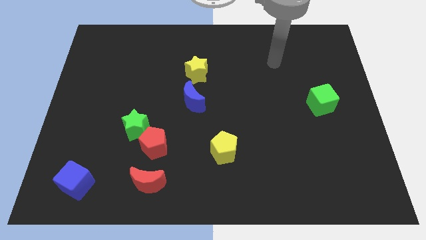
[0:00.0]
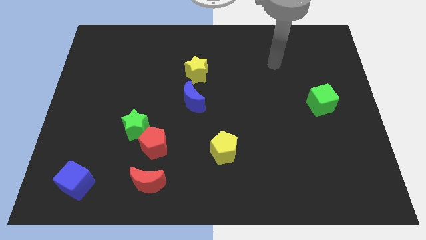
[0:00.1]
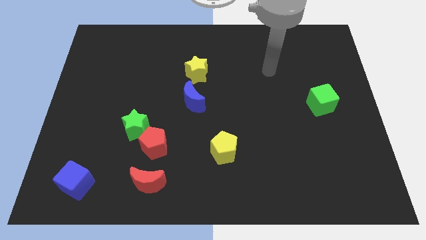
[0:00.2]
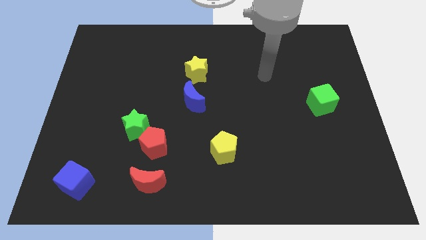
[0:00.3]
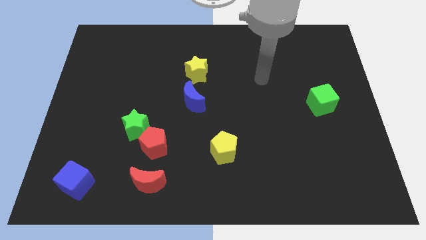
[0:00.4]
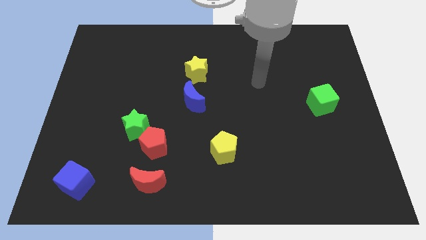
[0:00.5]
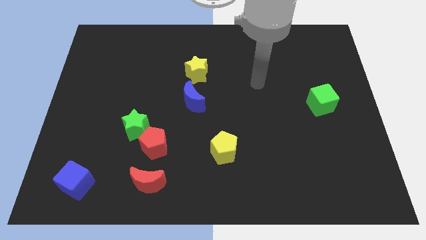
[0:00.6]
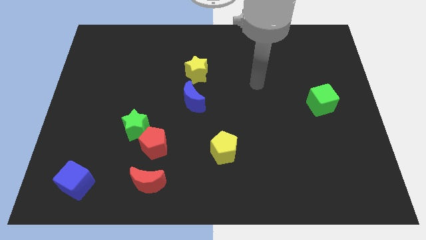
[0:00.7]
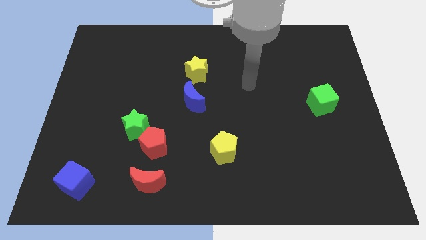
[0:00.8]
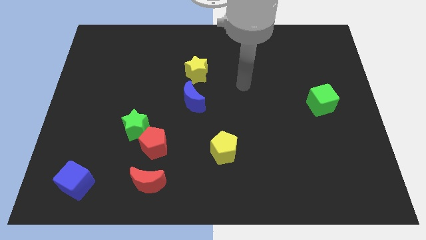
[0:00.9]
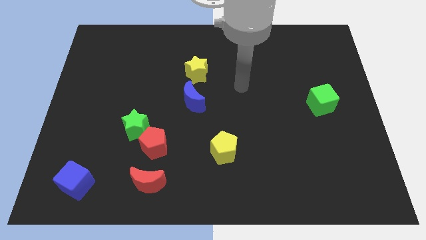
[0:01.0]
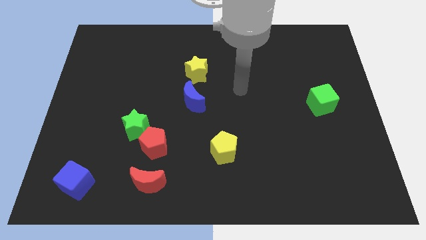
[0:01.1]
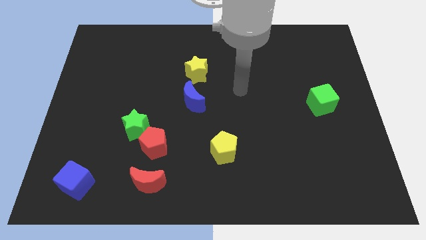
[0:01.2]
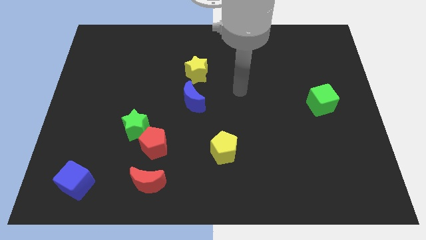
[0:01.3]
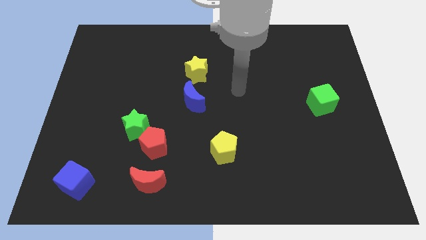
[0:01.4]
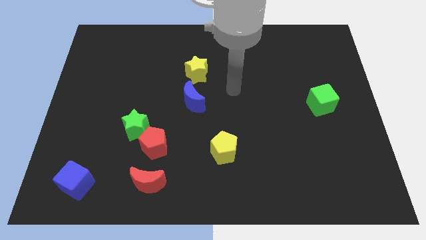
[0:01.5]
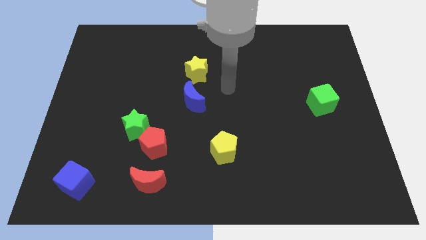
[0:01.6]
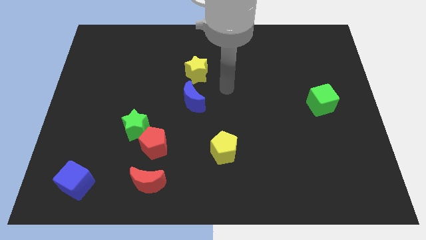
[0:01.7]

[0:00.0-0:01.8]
move your arm towards the center of the board

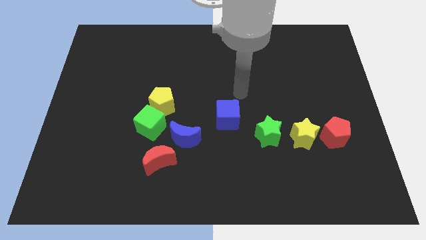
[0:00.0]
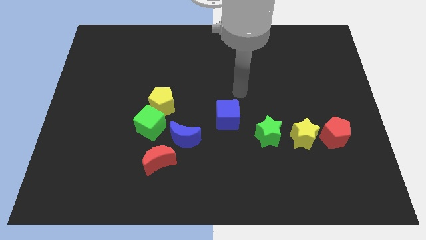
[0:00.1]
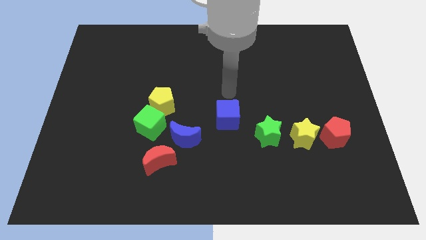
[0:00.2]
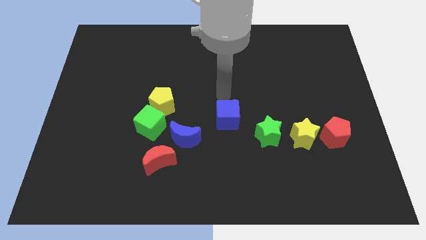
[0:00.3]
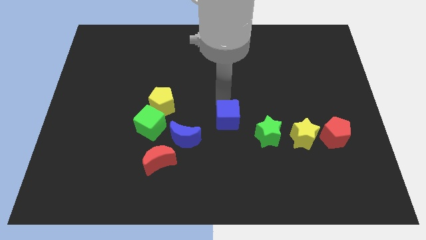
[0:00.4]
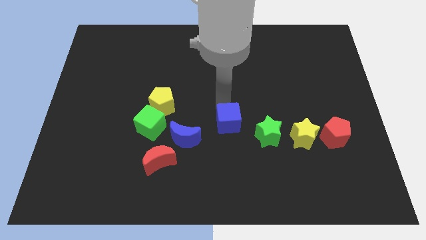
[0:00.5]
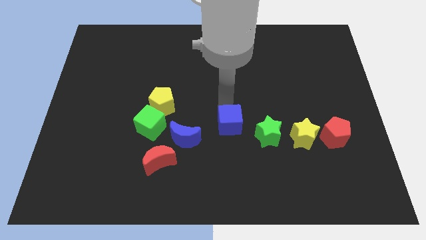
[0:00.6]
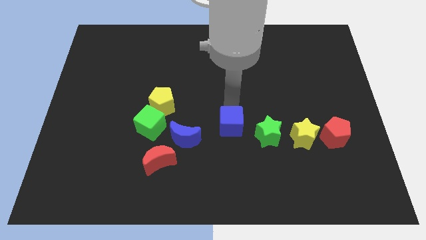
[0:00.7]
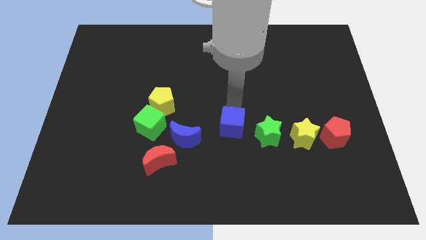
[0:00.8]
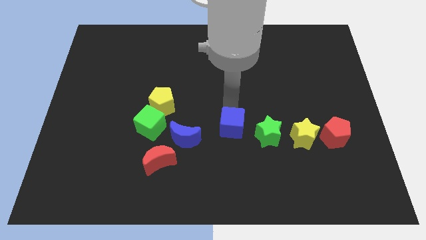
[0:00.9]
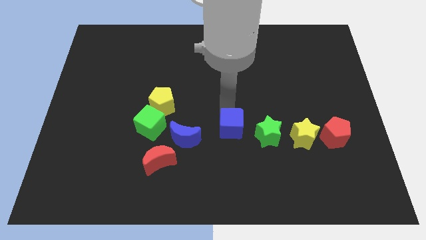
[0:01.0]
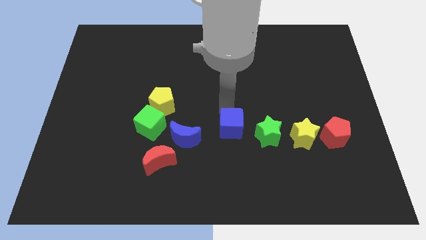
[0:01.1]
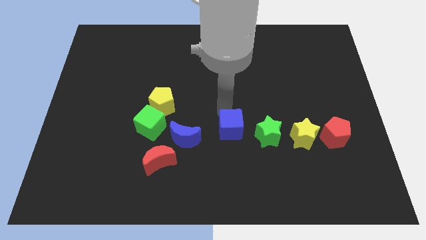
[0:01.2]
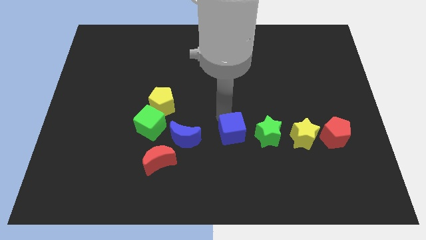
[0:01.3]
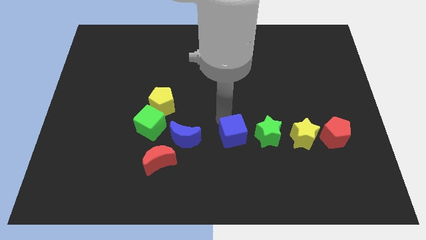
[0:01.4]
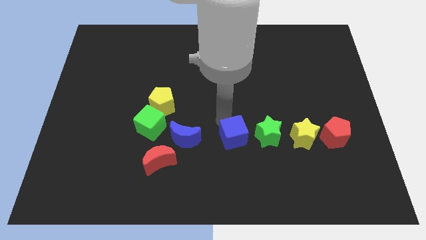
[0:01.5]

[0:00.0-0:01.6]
push blue cube slightly downwards

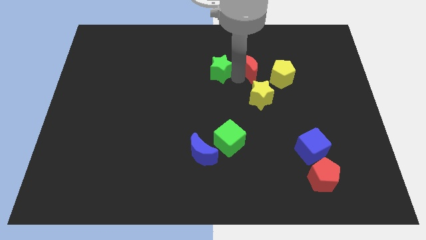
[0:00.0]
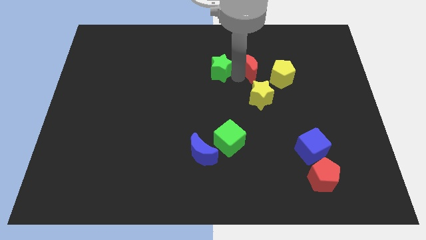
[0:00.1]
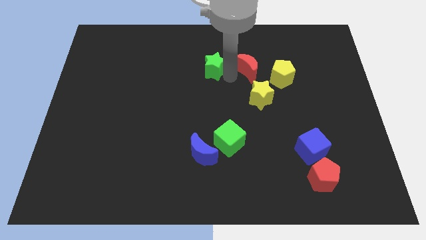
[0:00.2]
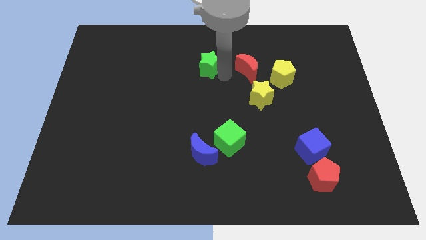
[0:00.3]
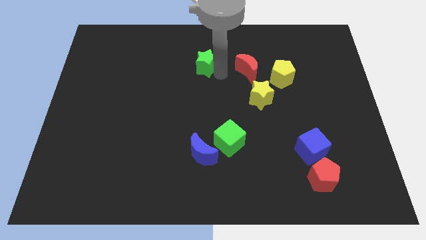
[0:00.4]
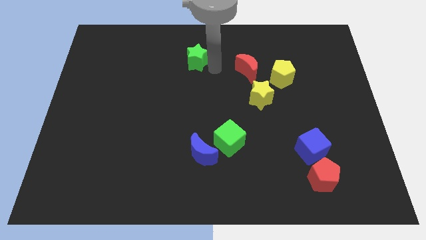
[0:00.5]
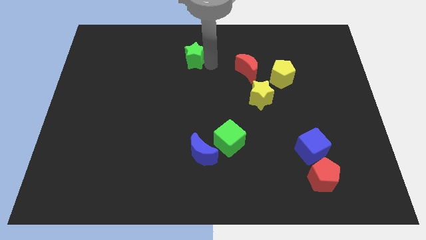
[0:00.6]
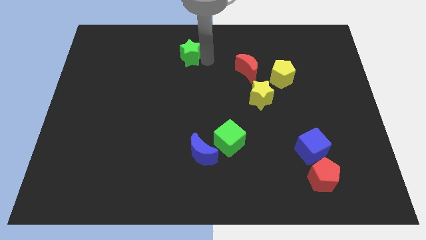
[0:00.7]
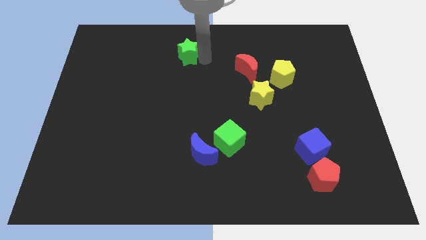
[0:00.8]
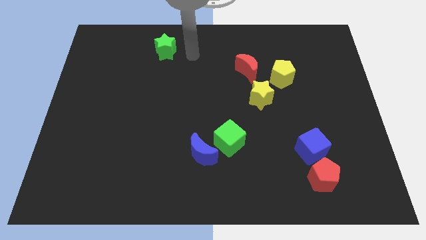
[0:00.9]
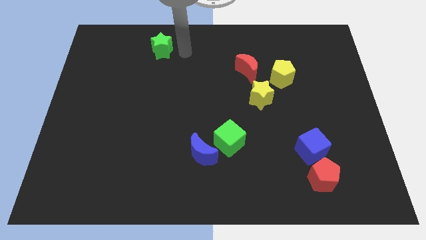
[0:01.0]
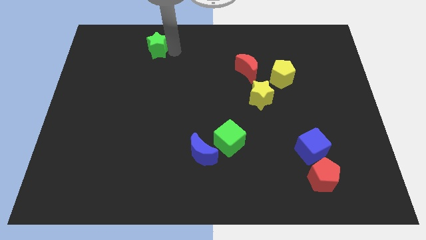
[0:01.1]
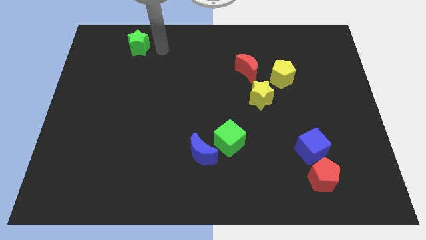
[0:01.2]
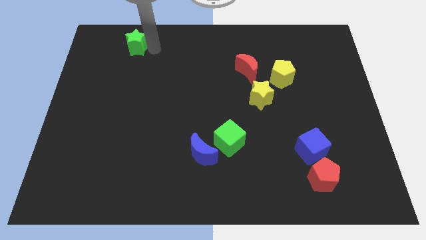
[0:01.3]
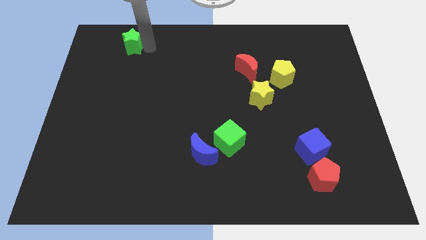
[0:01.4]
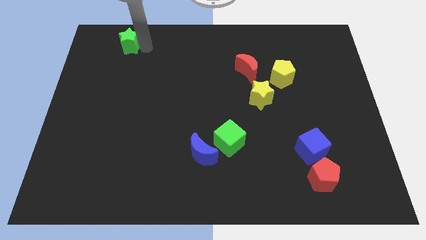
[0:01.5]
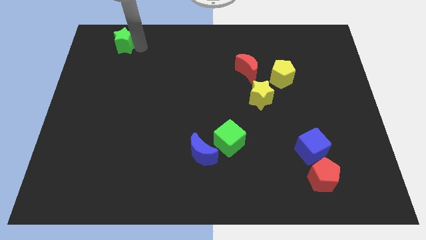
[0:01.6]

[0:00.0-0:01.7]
move the green star away from the red moon

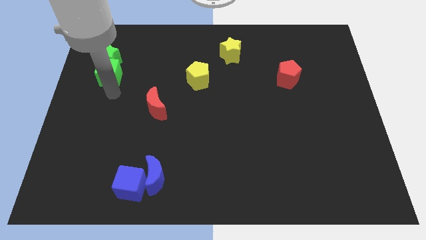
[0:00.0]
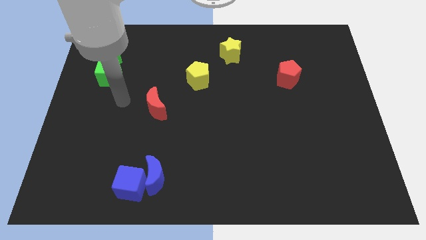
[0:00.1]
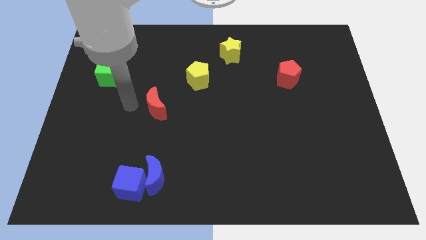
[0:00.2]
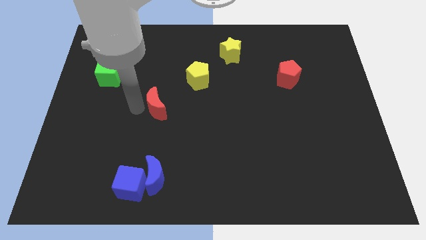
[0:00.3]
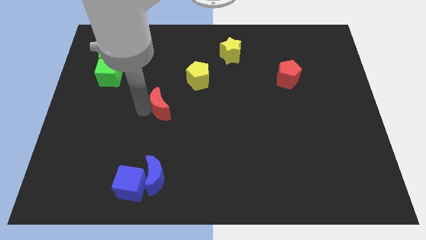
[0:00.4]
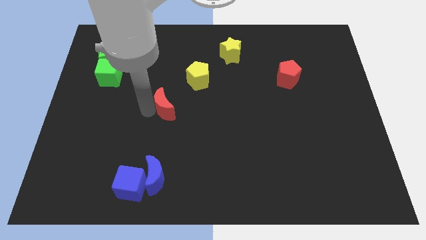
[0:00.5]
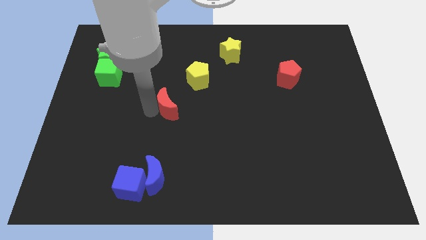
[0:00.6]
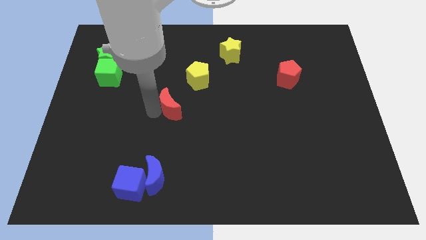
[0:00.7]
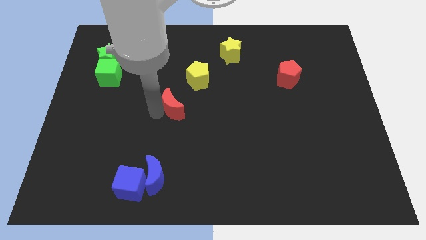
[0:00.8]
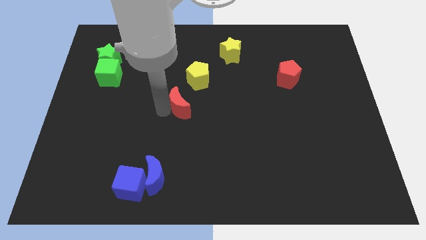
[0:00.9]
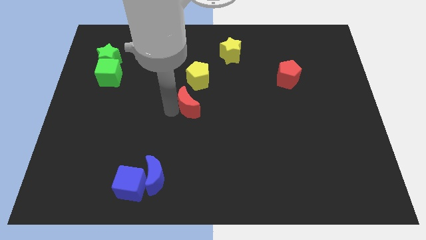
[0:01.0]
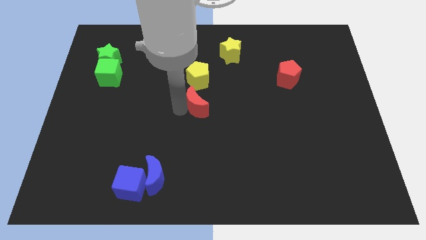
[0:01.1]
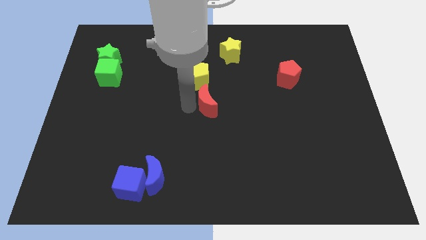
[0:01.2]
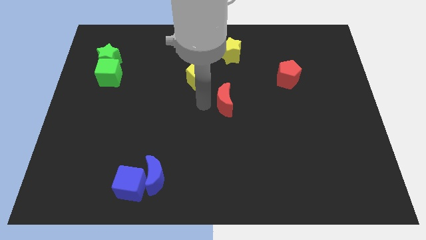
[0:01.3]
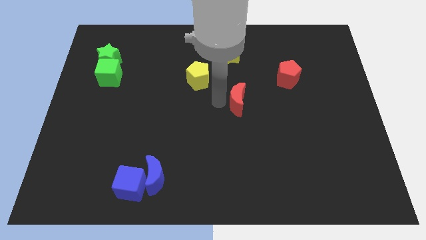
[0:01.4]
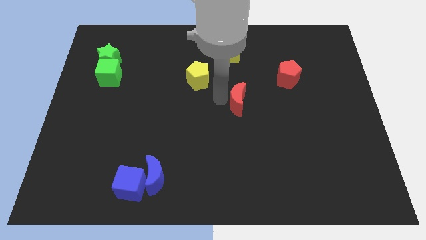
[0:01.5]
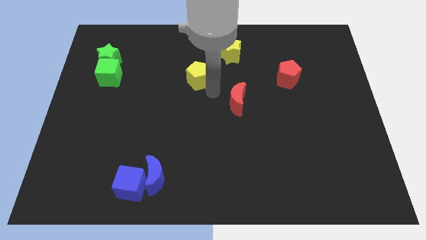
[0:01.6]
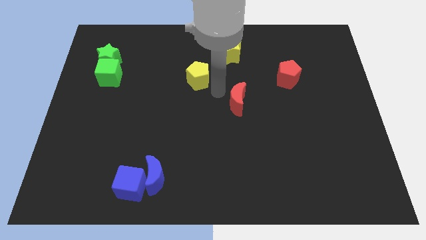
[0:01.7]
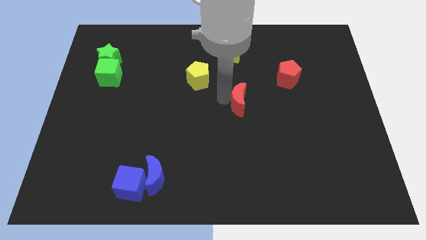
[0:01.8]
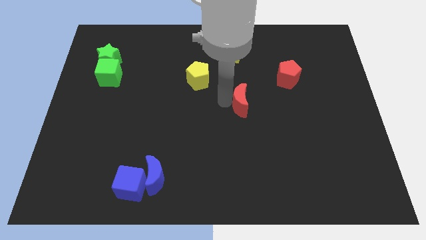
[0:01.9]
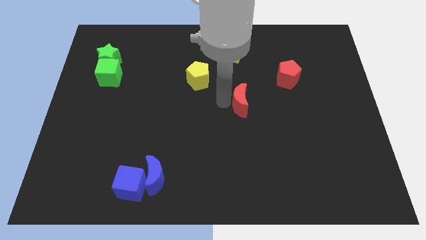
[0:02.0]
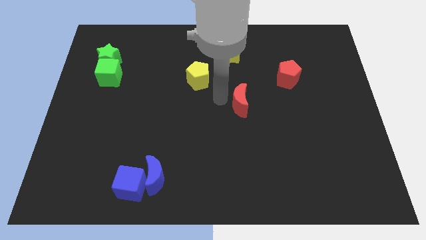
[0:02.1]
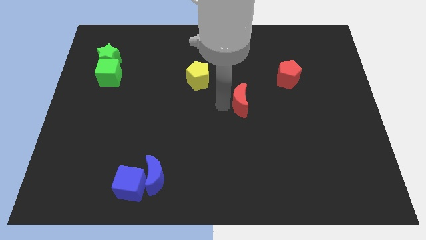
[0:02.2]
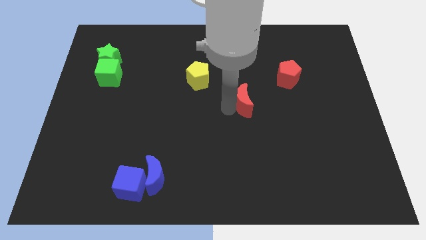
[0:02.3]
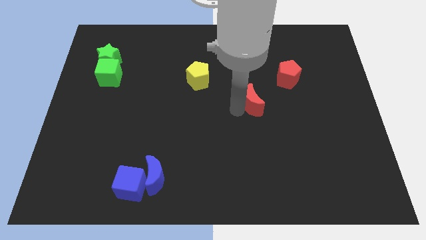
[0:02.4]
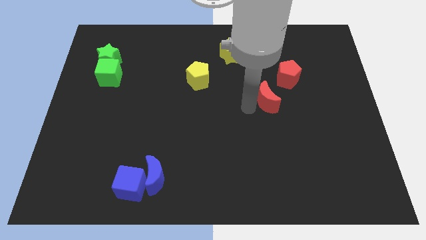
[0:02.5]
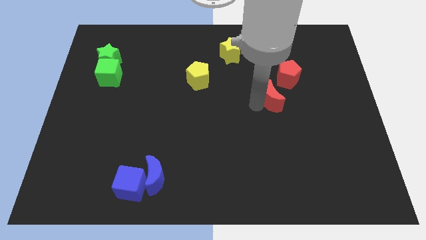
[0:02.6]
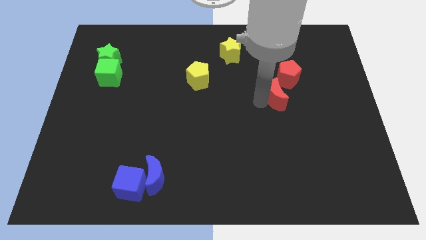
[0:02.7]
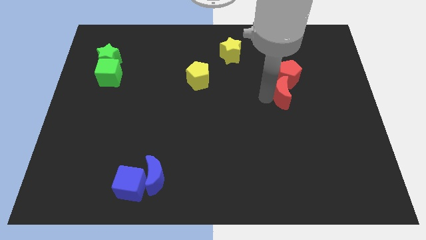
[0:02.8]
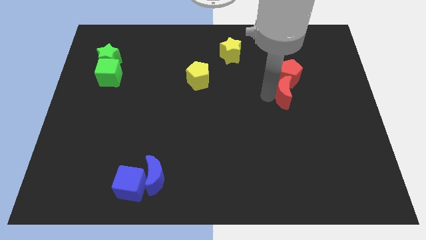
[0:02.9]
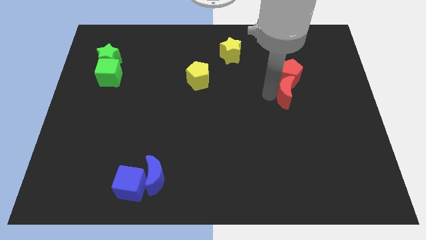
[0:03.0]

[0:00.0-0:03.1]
drag the red crescent into the bottom side of the red pentagon

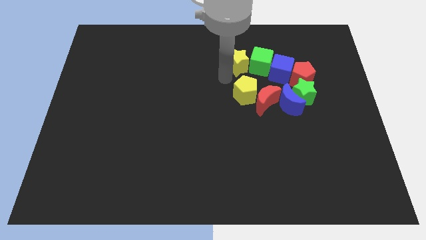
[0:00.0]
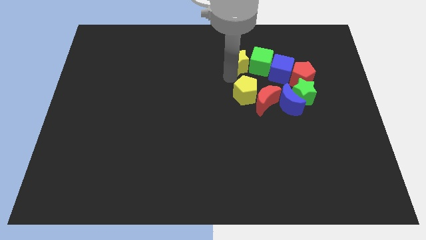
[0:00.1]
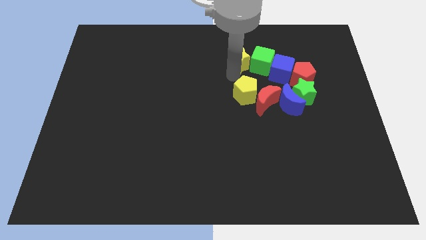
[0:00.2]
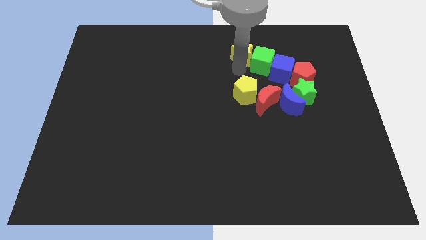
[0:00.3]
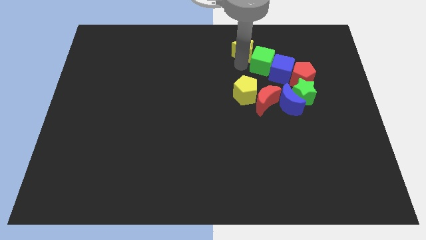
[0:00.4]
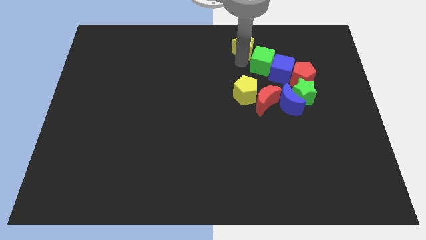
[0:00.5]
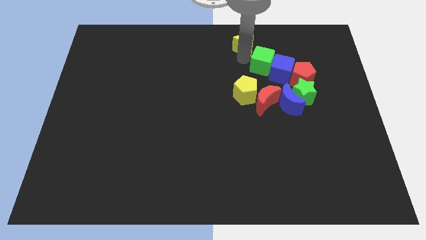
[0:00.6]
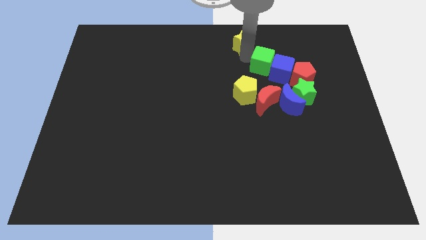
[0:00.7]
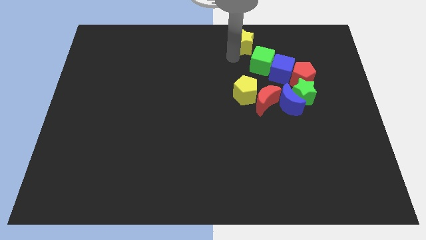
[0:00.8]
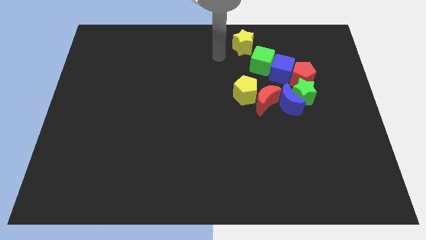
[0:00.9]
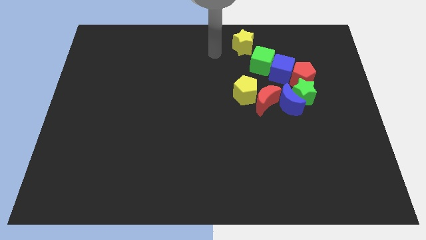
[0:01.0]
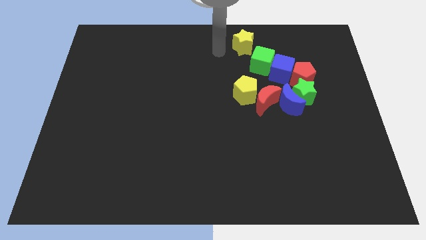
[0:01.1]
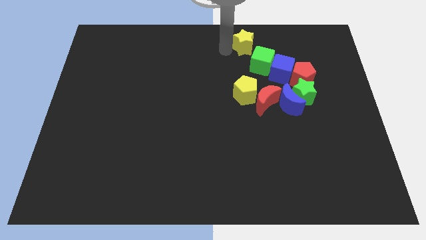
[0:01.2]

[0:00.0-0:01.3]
move the yellow star up slightly
